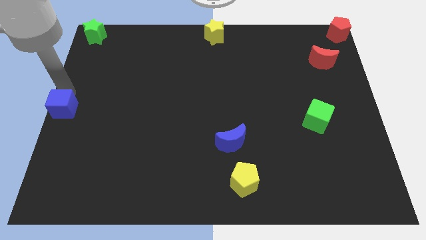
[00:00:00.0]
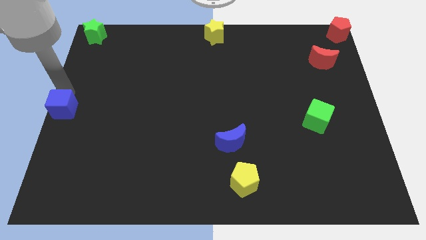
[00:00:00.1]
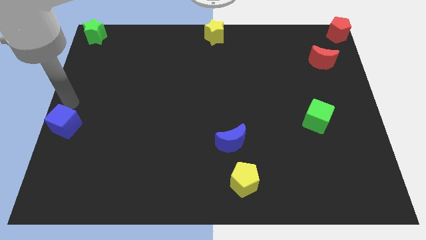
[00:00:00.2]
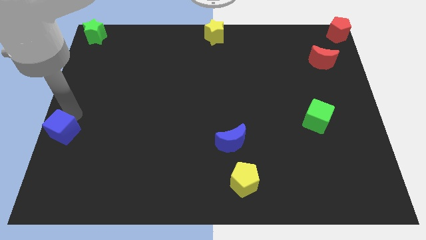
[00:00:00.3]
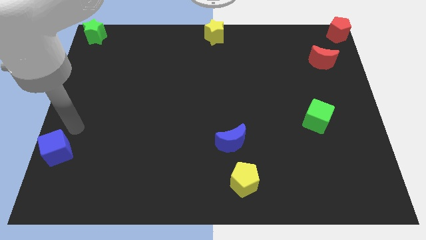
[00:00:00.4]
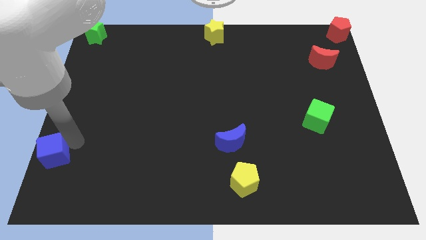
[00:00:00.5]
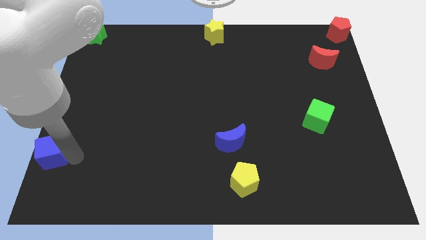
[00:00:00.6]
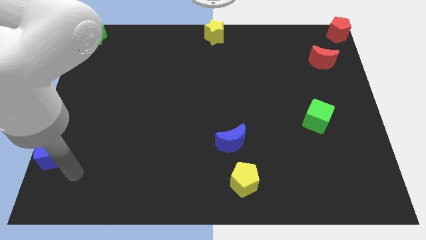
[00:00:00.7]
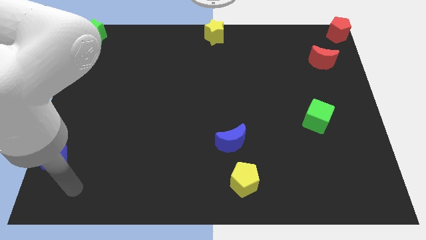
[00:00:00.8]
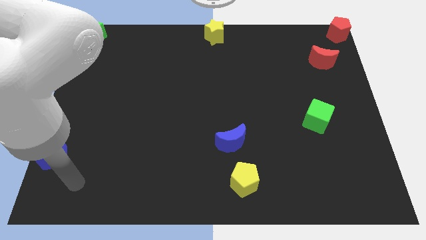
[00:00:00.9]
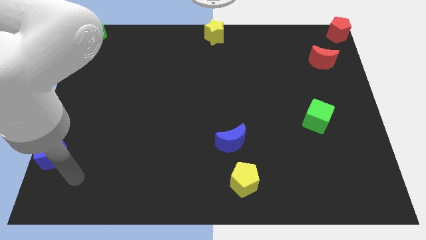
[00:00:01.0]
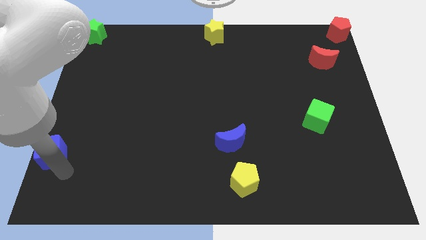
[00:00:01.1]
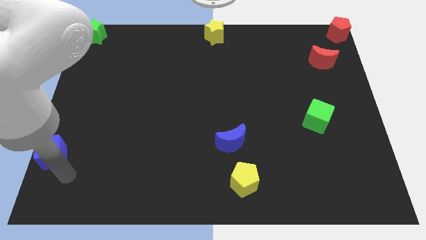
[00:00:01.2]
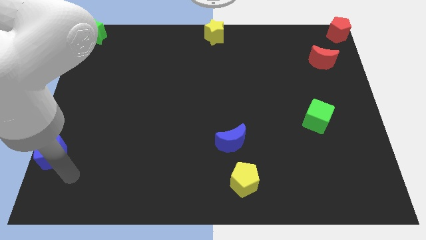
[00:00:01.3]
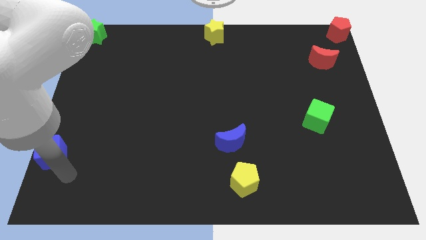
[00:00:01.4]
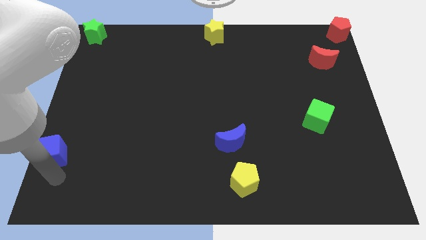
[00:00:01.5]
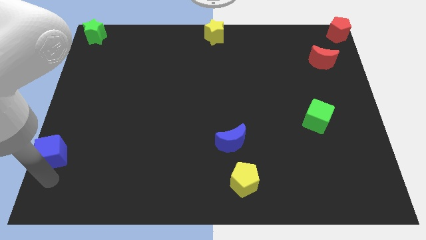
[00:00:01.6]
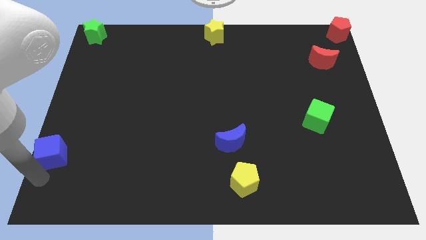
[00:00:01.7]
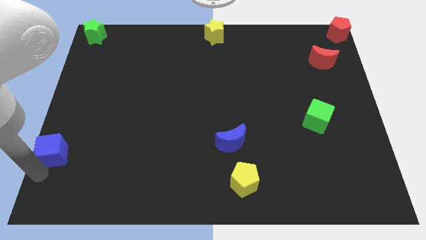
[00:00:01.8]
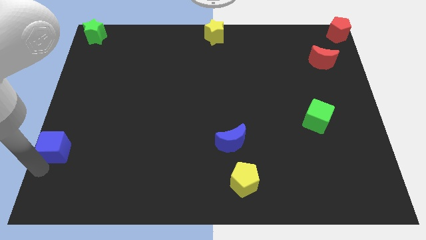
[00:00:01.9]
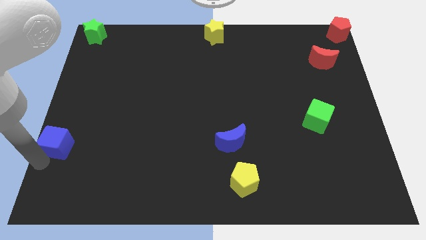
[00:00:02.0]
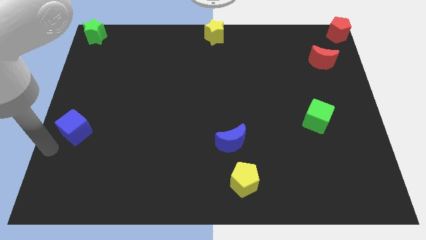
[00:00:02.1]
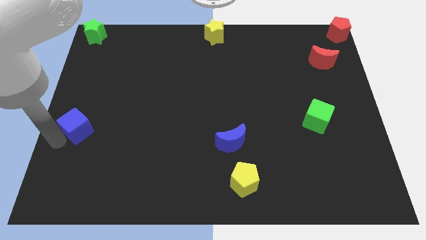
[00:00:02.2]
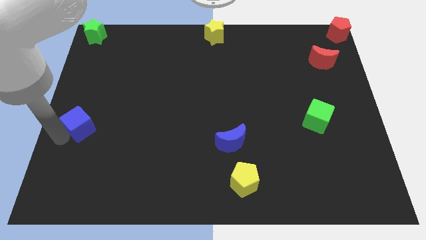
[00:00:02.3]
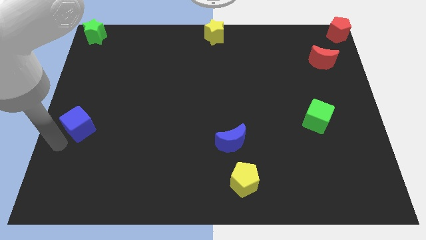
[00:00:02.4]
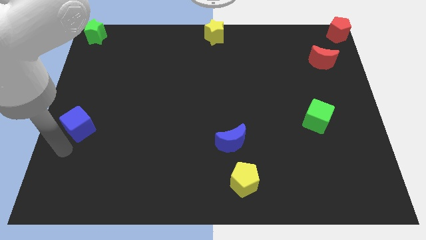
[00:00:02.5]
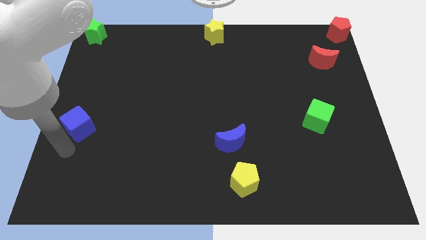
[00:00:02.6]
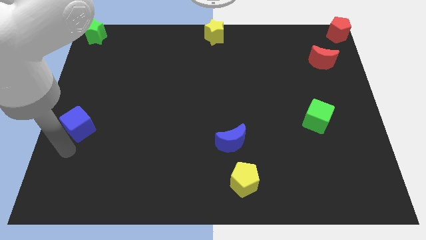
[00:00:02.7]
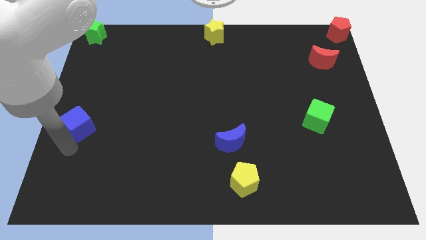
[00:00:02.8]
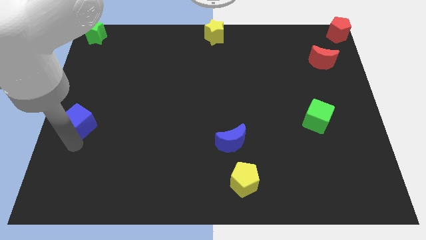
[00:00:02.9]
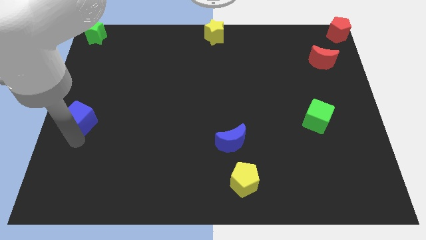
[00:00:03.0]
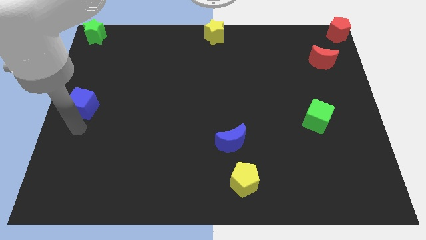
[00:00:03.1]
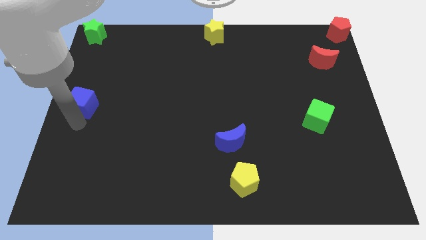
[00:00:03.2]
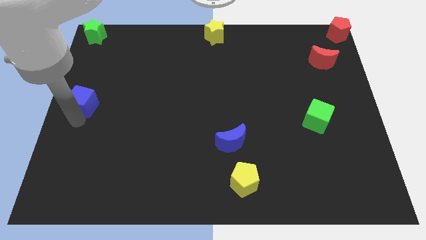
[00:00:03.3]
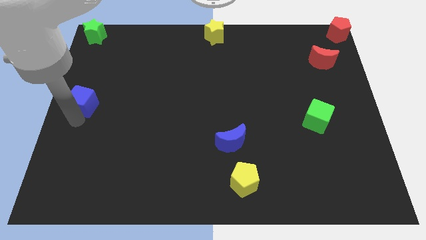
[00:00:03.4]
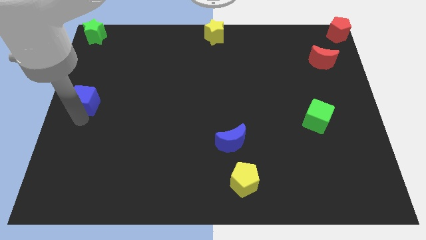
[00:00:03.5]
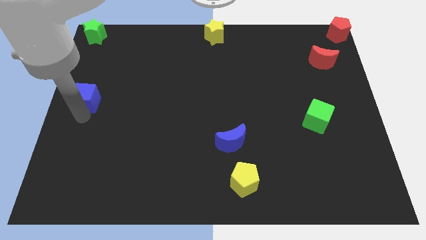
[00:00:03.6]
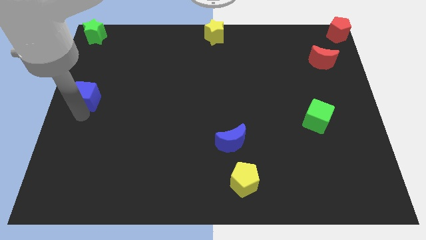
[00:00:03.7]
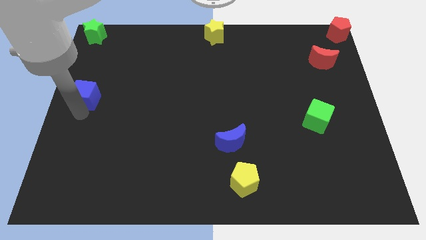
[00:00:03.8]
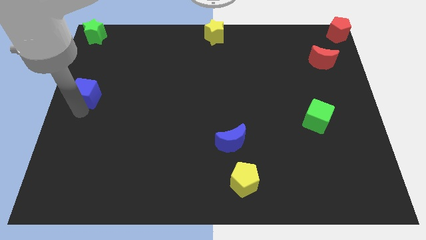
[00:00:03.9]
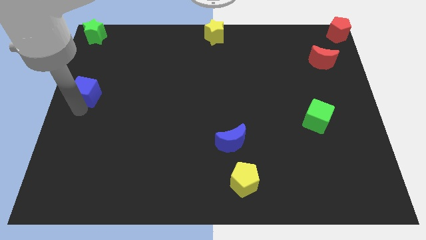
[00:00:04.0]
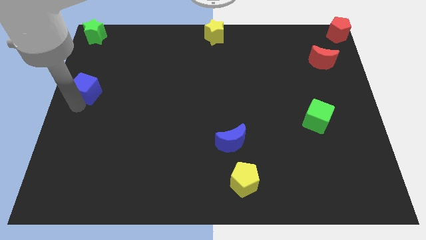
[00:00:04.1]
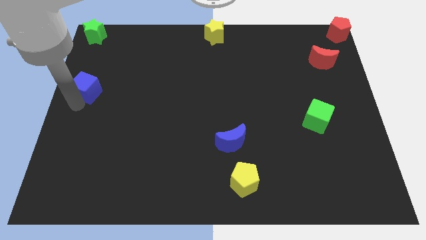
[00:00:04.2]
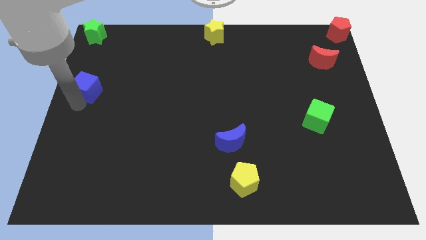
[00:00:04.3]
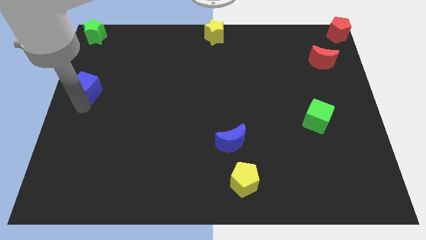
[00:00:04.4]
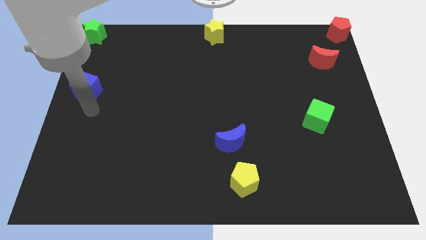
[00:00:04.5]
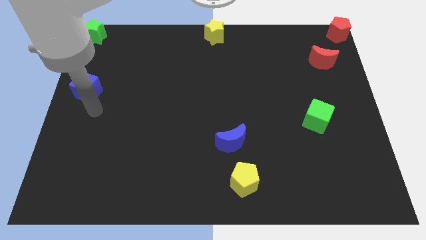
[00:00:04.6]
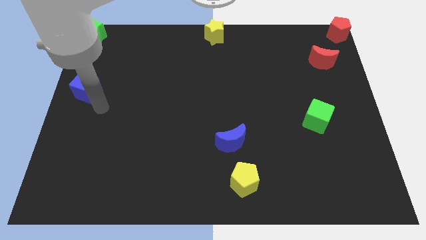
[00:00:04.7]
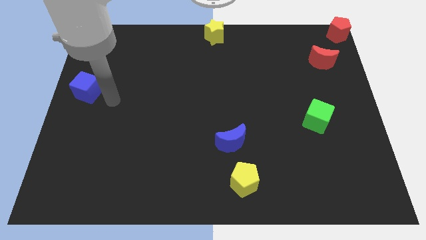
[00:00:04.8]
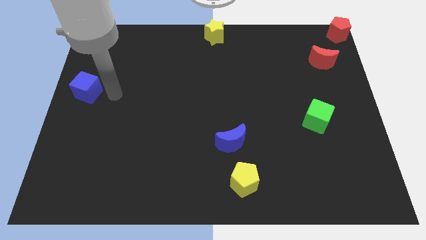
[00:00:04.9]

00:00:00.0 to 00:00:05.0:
move the blue cube downwards and upwards again

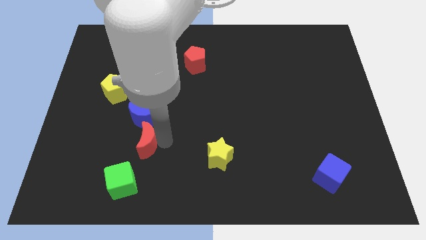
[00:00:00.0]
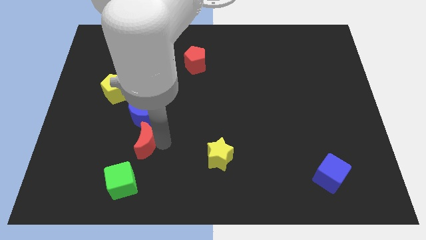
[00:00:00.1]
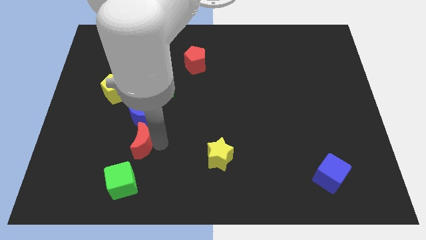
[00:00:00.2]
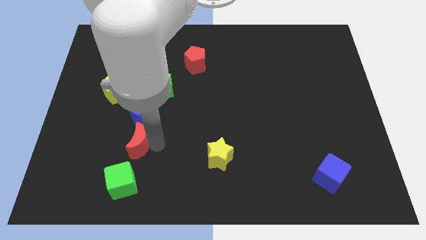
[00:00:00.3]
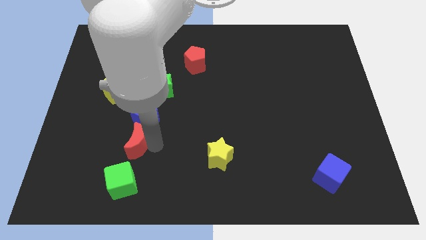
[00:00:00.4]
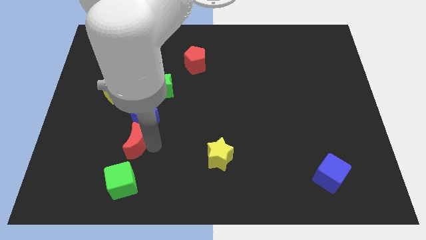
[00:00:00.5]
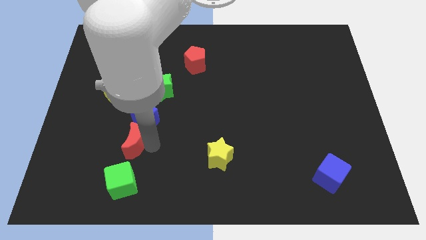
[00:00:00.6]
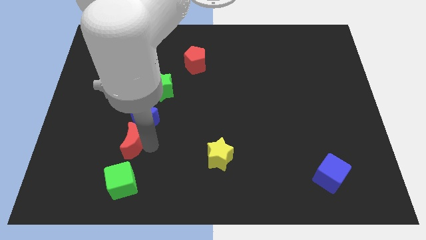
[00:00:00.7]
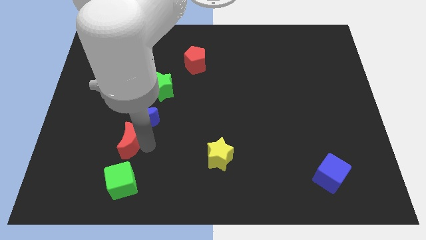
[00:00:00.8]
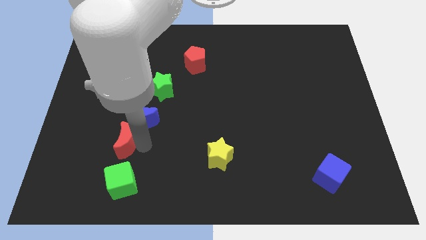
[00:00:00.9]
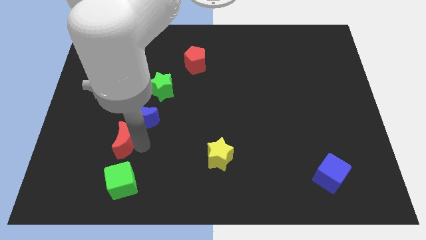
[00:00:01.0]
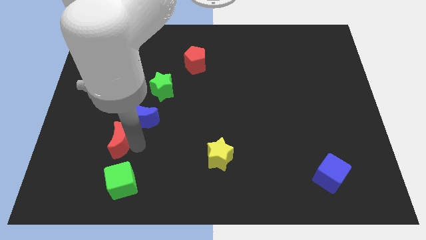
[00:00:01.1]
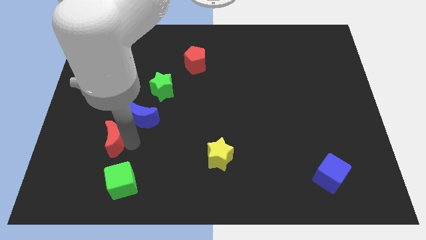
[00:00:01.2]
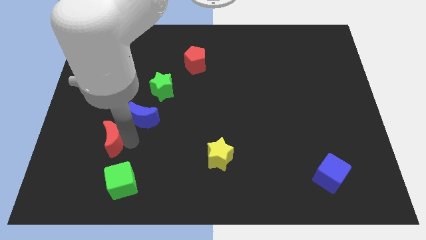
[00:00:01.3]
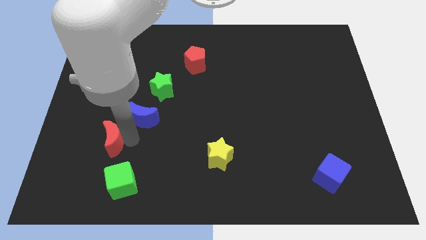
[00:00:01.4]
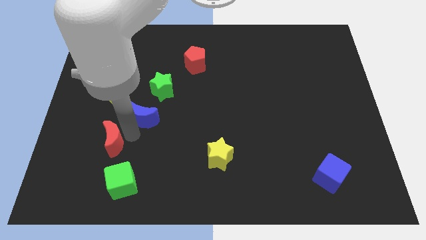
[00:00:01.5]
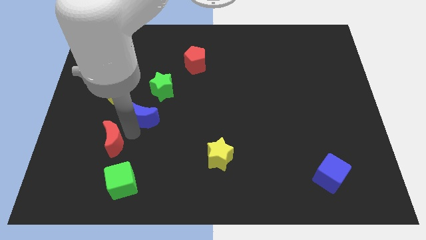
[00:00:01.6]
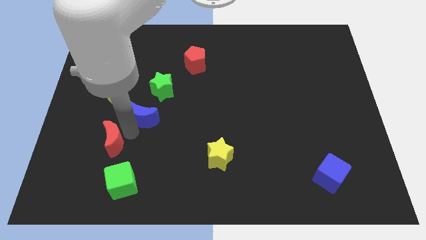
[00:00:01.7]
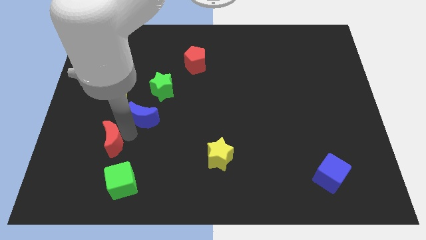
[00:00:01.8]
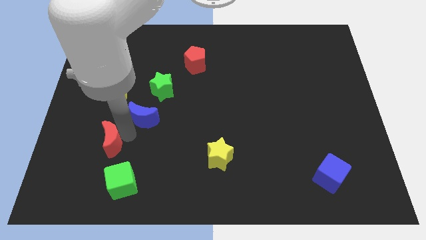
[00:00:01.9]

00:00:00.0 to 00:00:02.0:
separate red moon from the blue moon

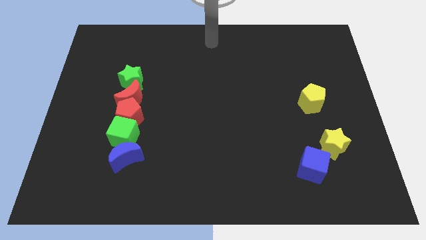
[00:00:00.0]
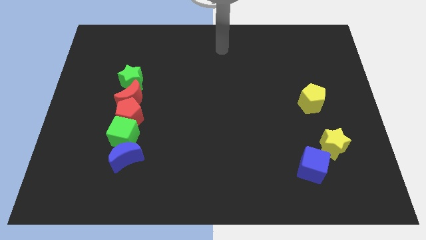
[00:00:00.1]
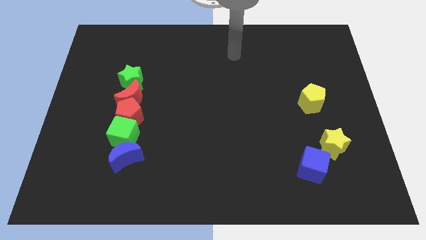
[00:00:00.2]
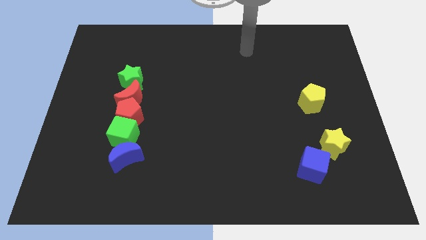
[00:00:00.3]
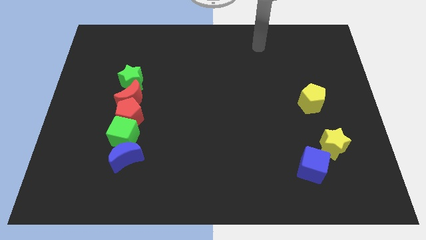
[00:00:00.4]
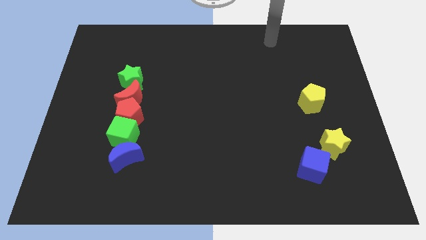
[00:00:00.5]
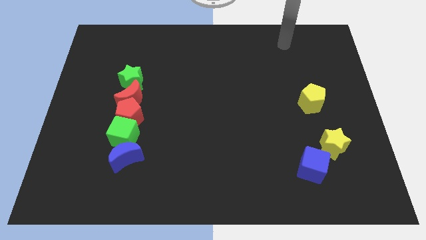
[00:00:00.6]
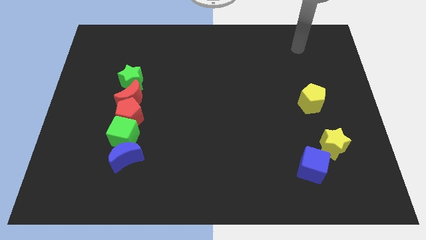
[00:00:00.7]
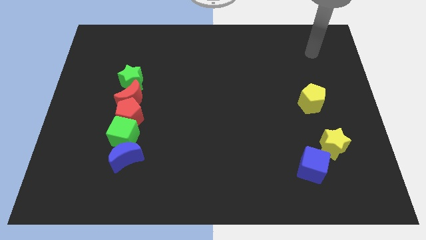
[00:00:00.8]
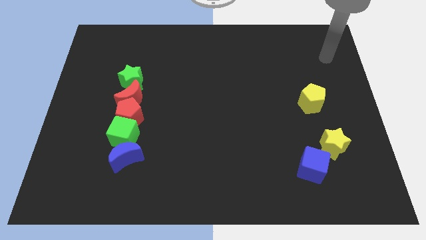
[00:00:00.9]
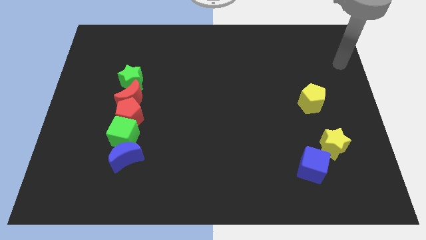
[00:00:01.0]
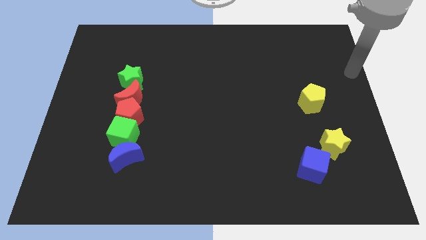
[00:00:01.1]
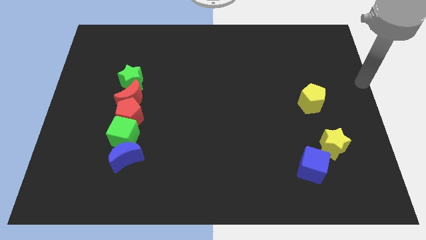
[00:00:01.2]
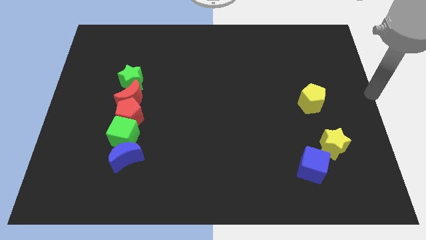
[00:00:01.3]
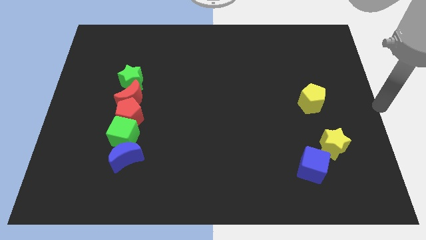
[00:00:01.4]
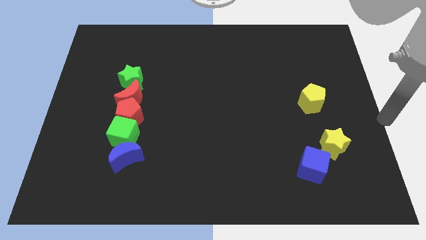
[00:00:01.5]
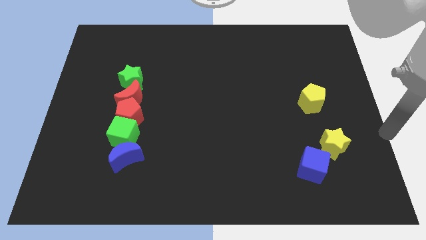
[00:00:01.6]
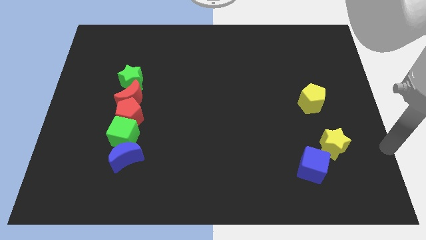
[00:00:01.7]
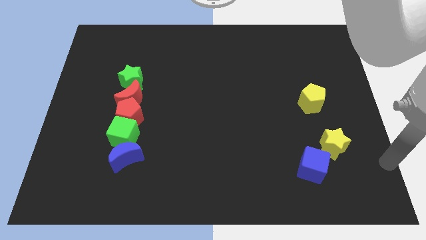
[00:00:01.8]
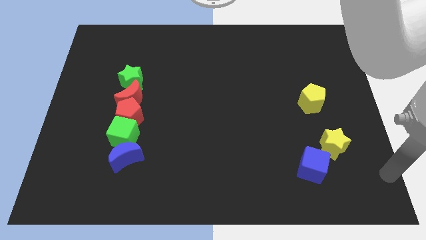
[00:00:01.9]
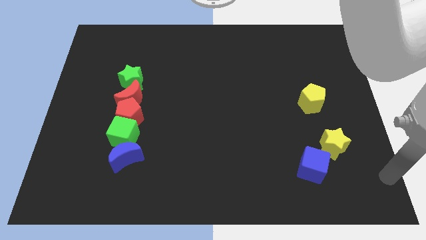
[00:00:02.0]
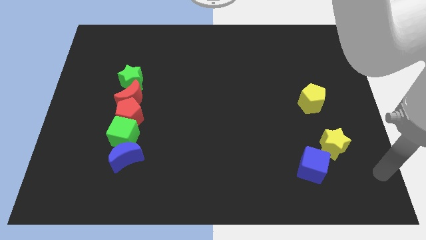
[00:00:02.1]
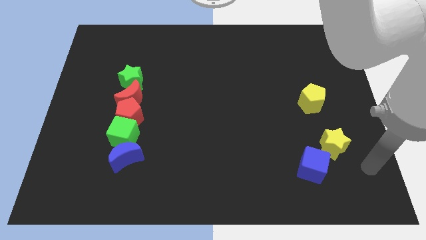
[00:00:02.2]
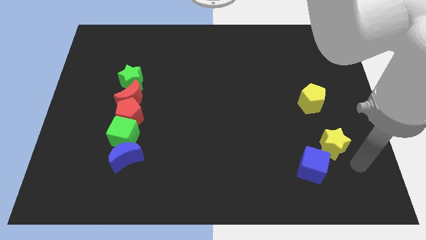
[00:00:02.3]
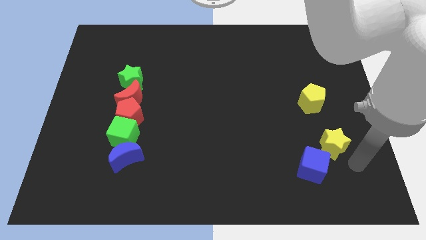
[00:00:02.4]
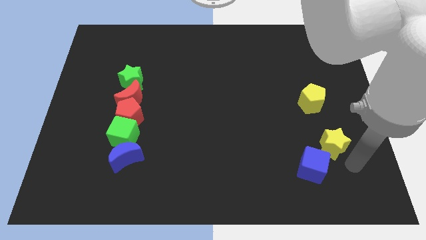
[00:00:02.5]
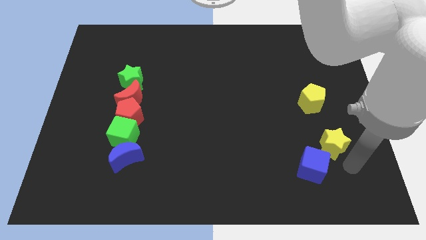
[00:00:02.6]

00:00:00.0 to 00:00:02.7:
move your arm towards yellow star
